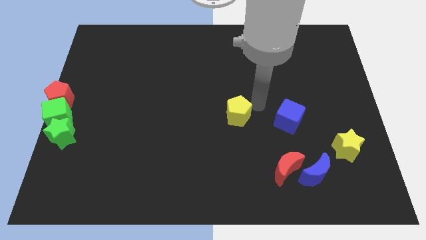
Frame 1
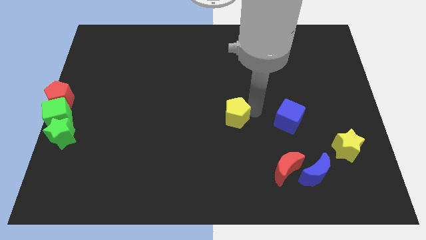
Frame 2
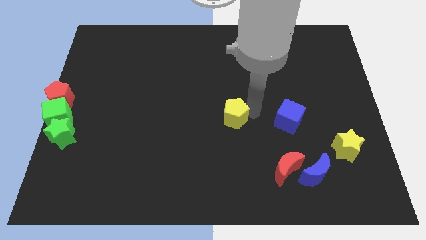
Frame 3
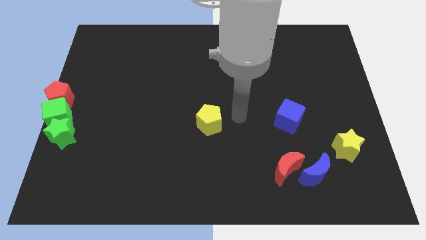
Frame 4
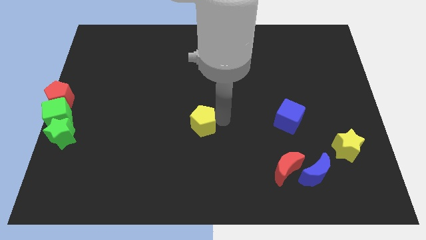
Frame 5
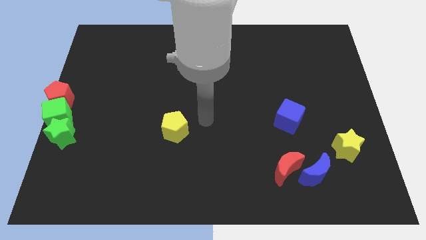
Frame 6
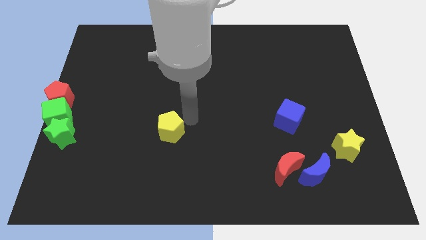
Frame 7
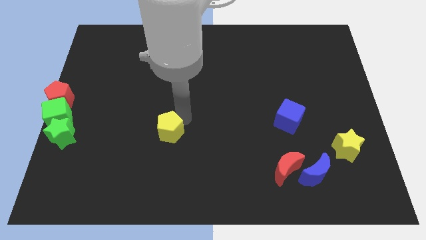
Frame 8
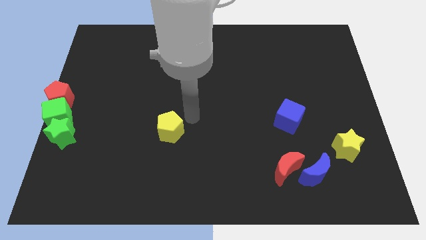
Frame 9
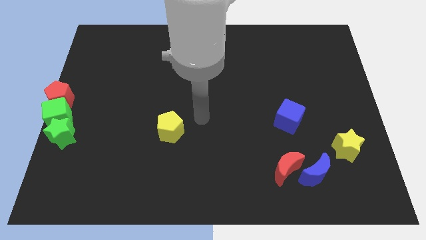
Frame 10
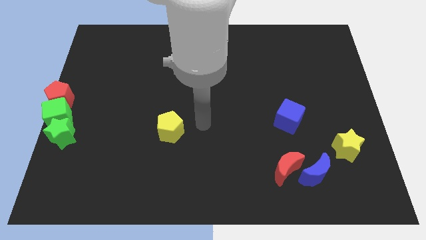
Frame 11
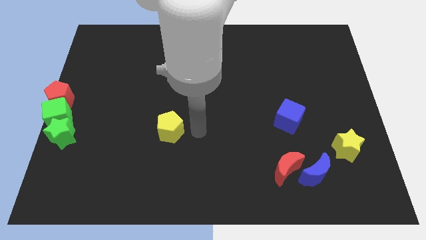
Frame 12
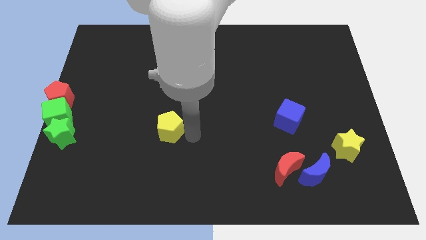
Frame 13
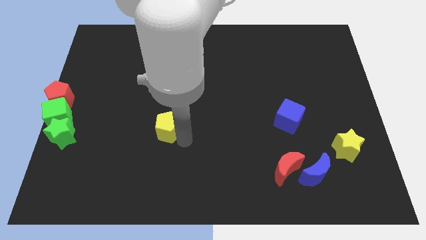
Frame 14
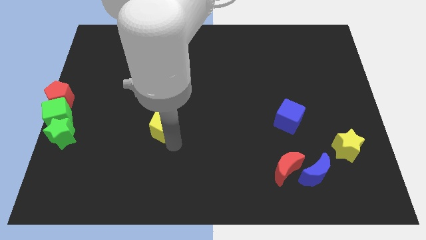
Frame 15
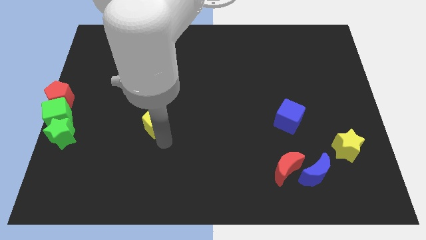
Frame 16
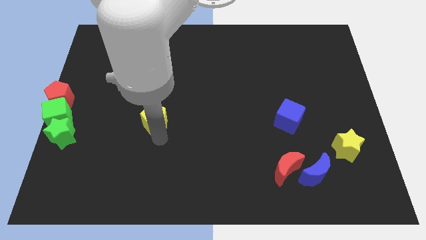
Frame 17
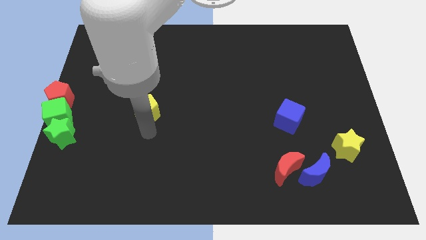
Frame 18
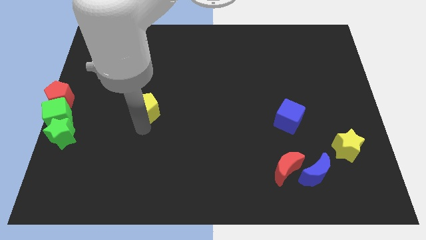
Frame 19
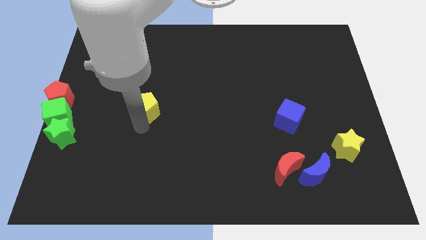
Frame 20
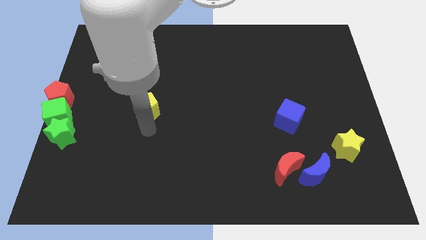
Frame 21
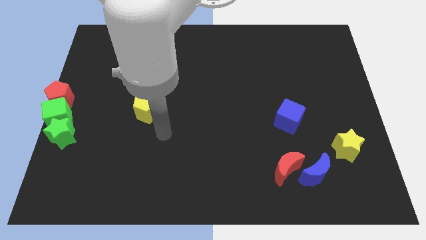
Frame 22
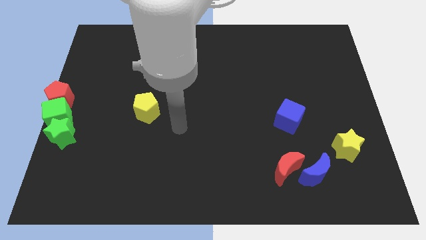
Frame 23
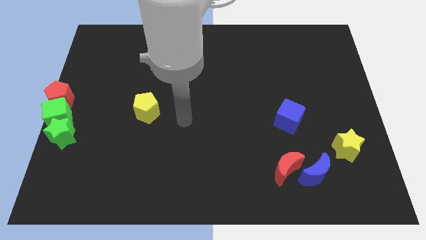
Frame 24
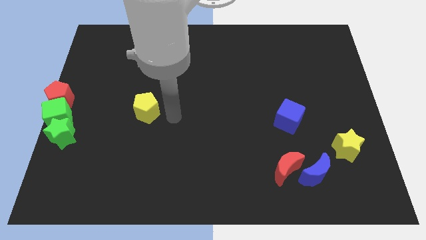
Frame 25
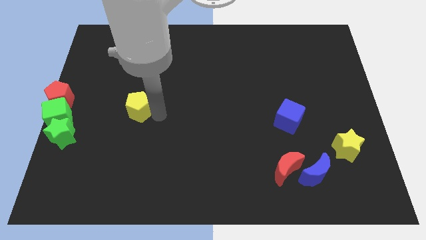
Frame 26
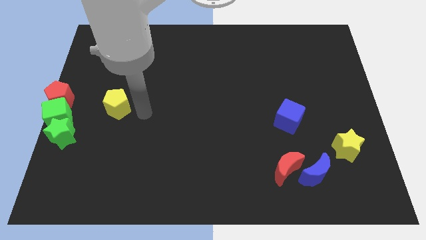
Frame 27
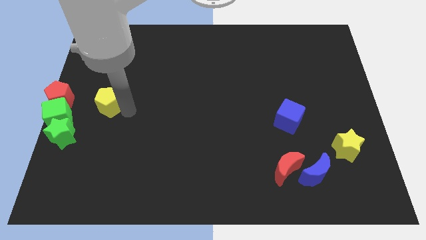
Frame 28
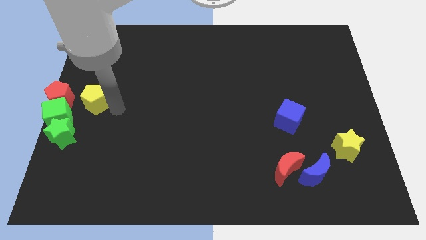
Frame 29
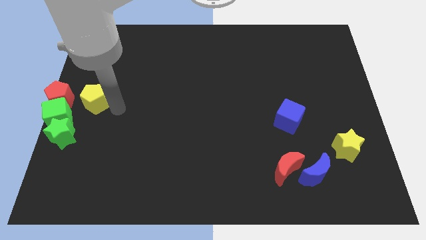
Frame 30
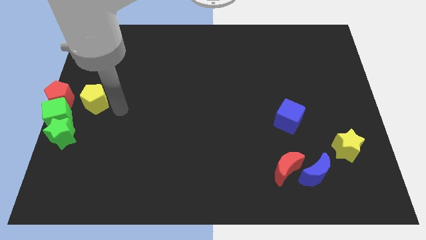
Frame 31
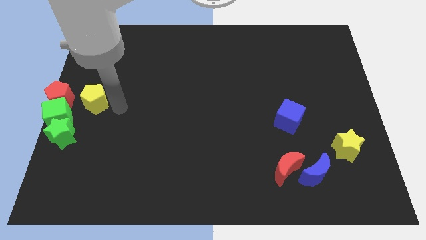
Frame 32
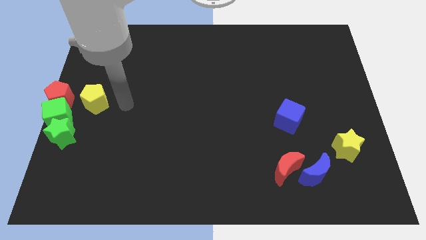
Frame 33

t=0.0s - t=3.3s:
place yellow pentagon to the right of red pentagon

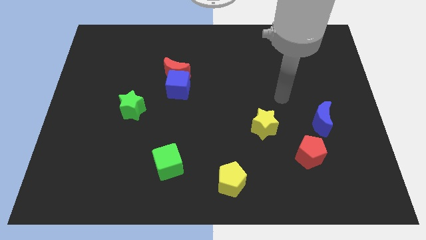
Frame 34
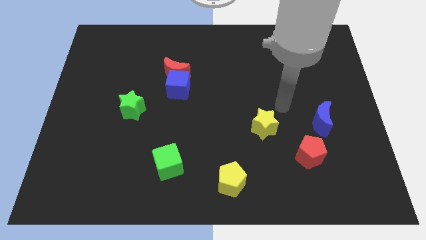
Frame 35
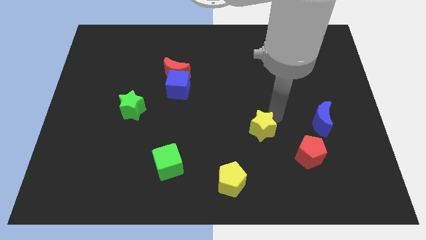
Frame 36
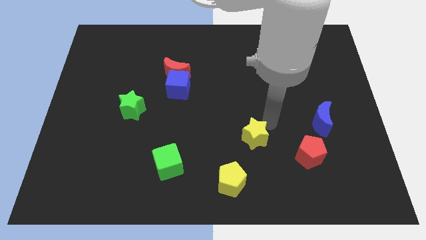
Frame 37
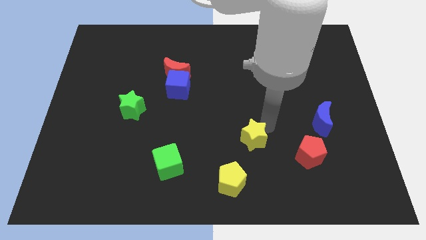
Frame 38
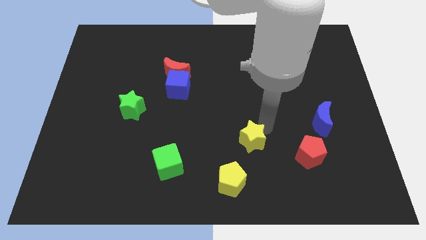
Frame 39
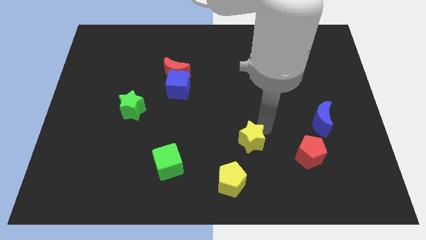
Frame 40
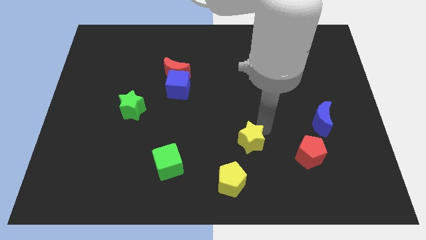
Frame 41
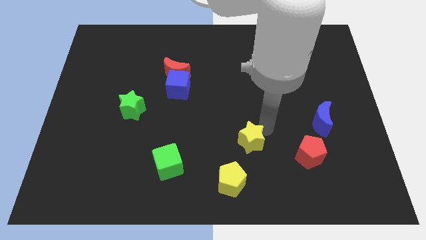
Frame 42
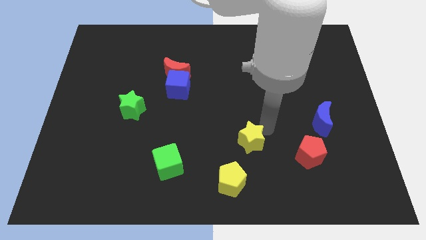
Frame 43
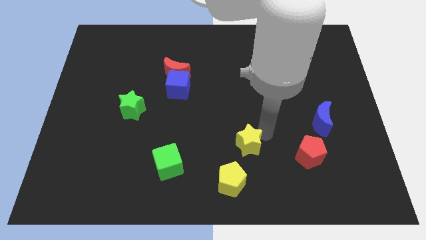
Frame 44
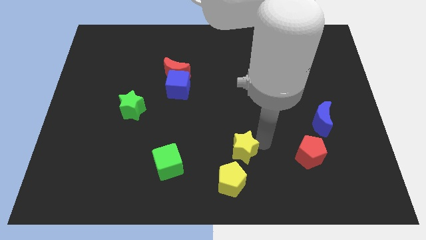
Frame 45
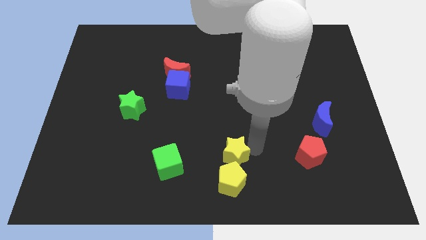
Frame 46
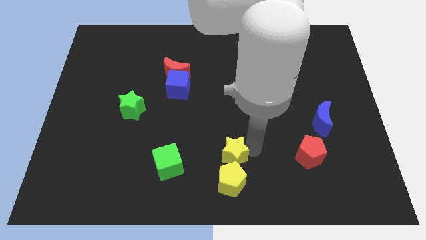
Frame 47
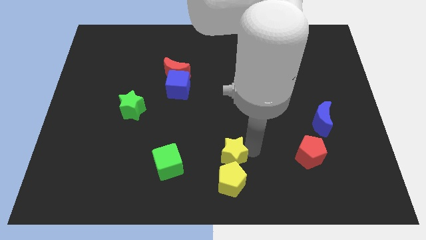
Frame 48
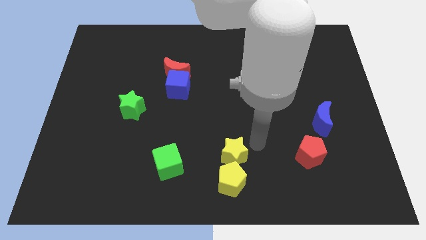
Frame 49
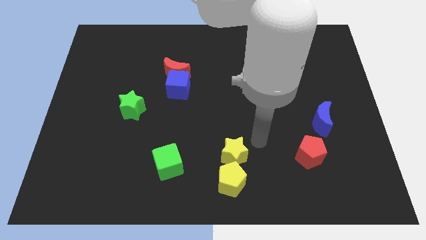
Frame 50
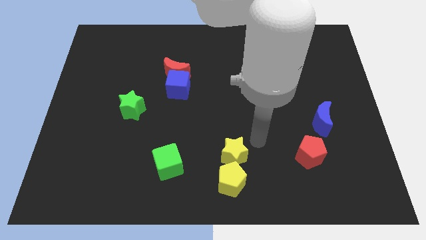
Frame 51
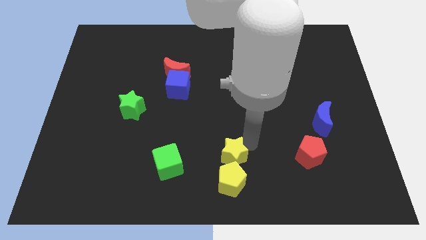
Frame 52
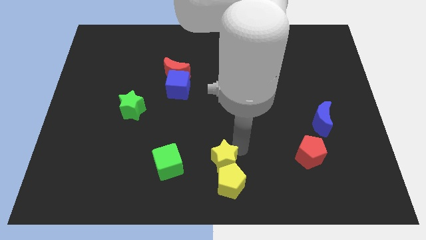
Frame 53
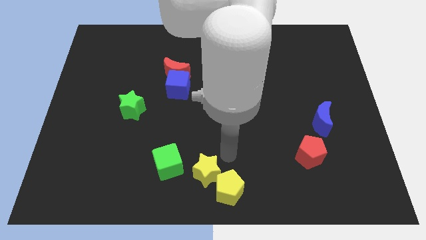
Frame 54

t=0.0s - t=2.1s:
push the yellow star into the yellow pentagon

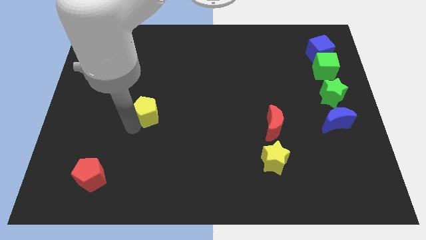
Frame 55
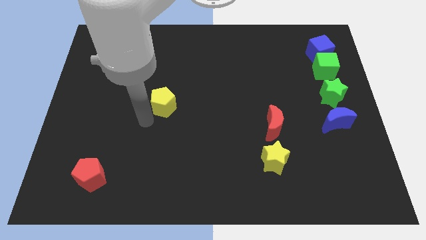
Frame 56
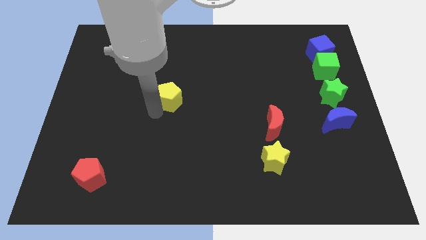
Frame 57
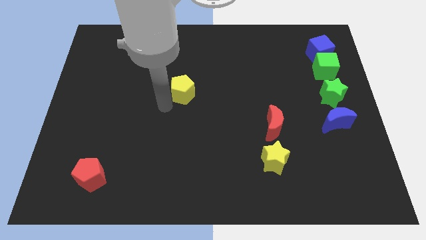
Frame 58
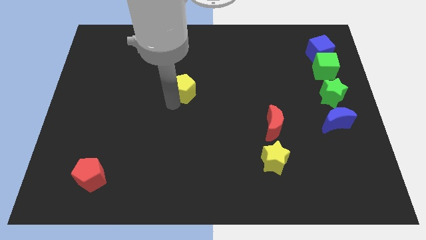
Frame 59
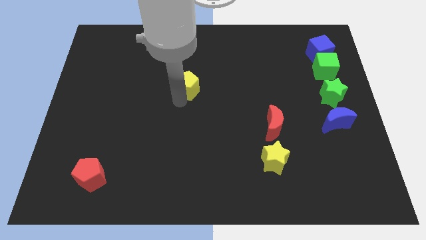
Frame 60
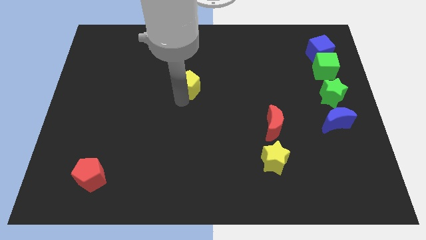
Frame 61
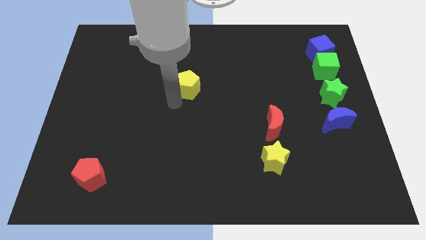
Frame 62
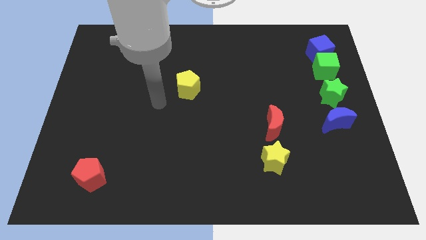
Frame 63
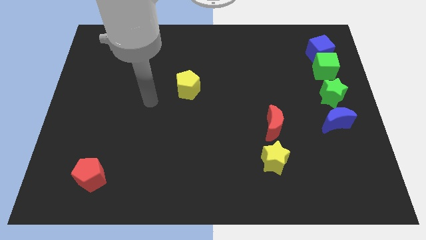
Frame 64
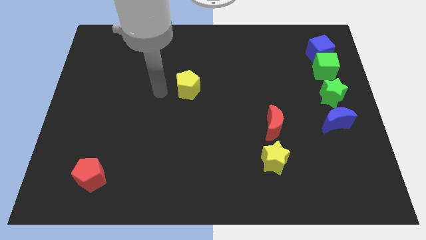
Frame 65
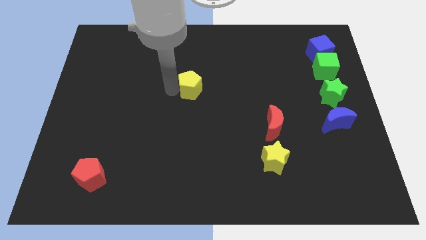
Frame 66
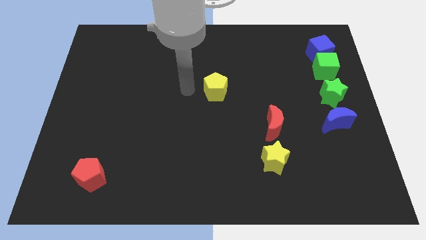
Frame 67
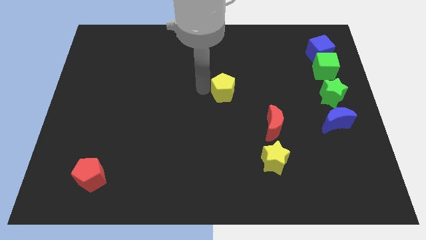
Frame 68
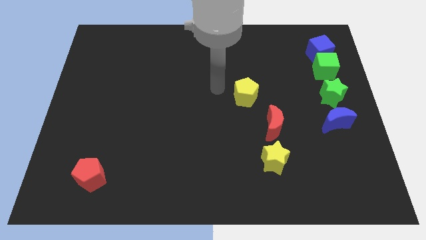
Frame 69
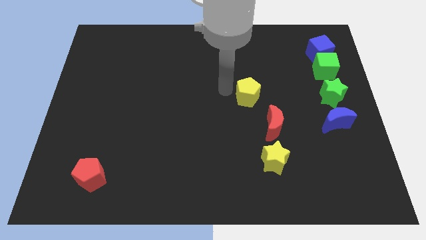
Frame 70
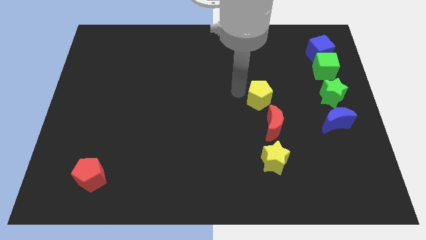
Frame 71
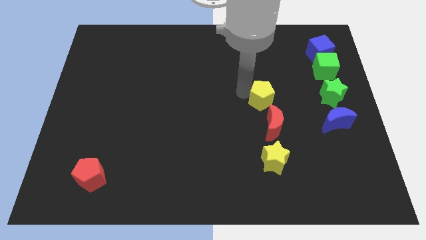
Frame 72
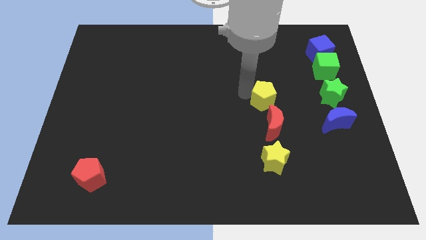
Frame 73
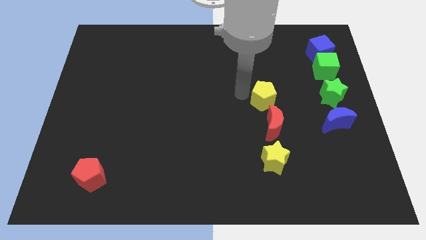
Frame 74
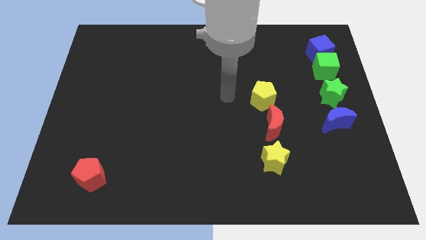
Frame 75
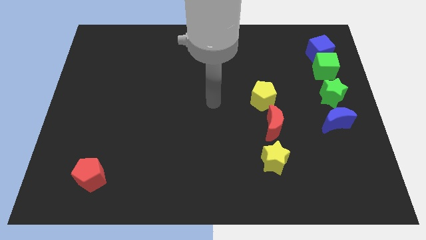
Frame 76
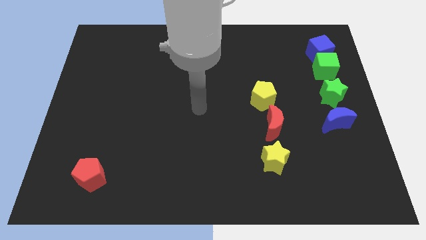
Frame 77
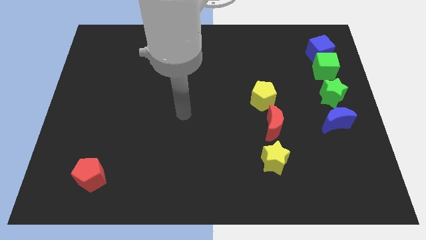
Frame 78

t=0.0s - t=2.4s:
push the yellow pentagon close to the top of the red crescent

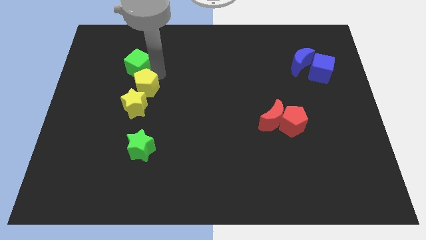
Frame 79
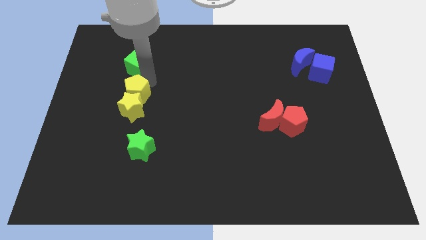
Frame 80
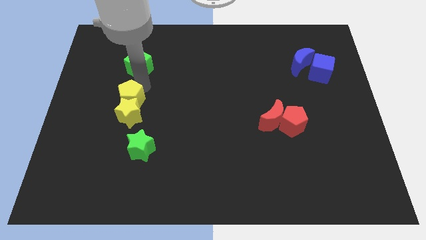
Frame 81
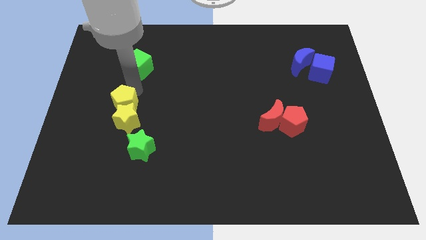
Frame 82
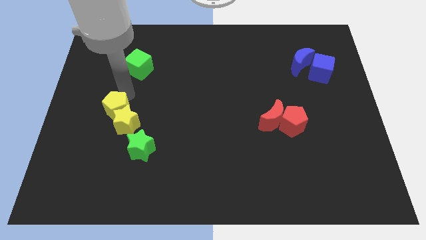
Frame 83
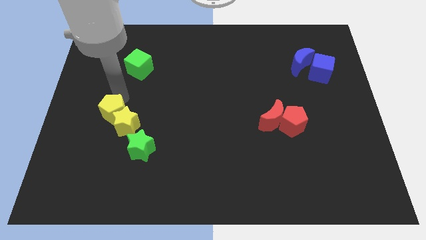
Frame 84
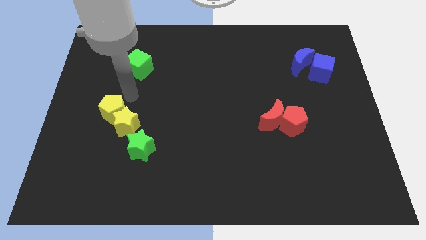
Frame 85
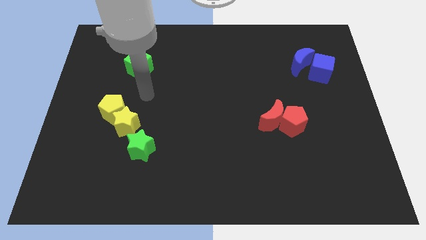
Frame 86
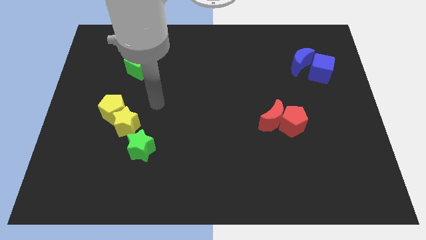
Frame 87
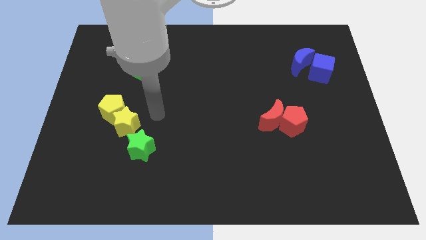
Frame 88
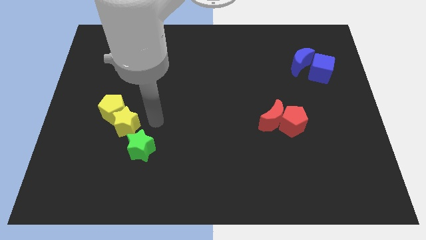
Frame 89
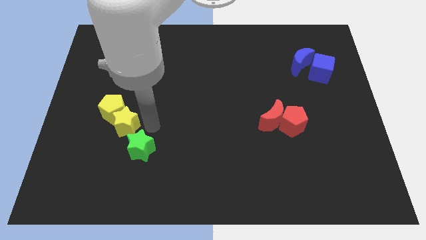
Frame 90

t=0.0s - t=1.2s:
push the yellow star slightly with the yellow pentagon

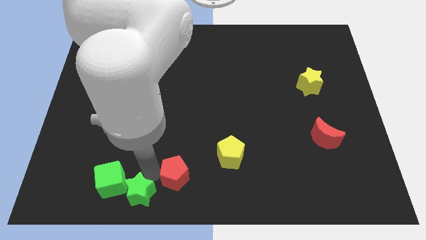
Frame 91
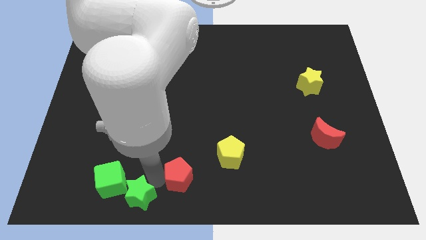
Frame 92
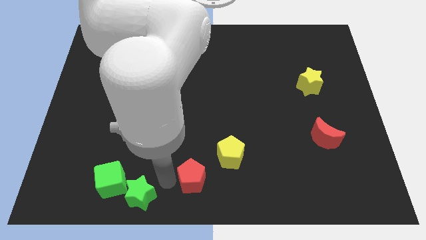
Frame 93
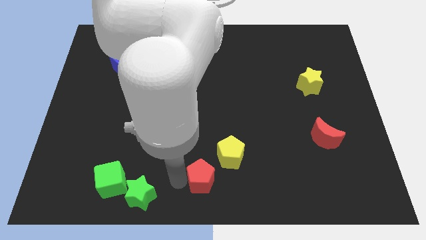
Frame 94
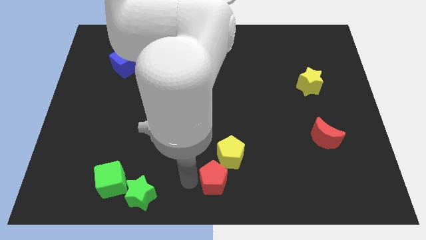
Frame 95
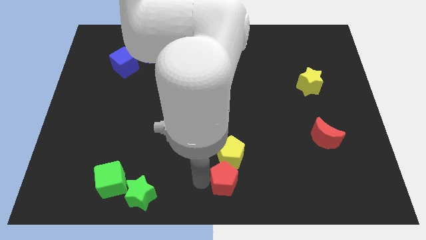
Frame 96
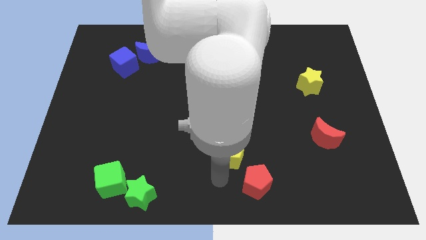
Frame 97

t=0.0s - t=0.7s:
put red pentagon below yellow pentagon
